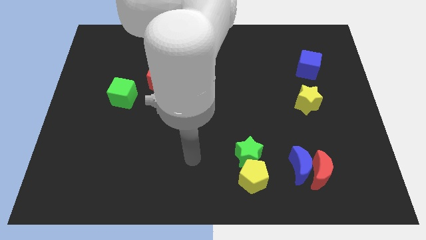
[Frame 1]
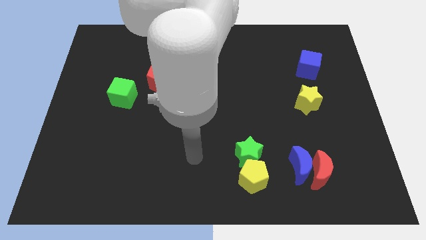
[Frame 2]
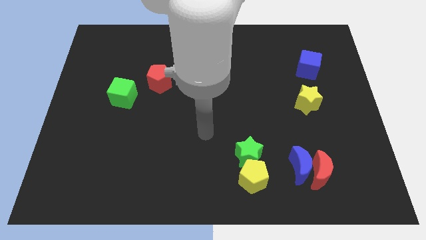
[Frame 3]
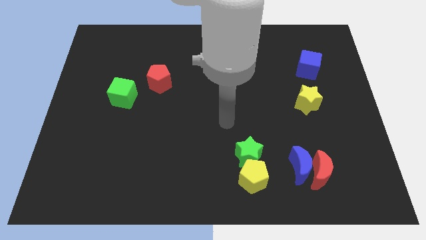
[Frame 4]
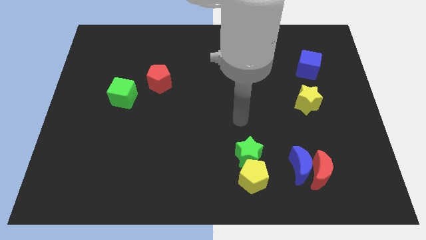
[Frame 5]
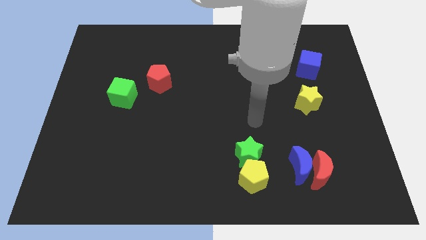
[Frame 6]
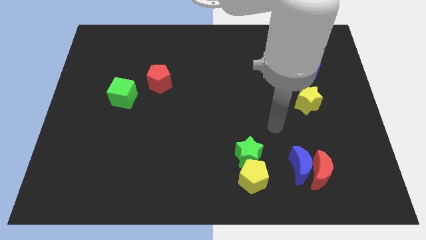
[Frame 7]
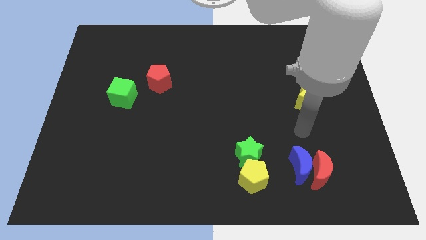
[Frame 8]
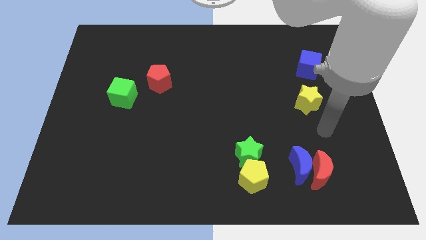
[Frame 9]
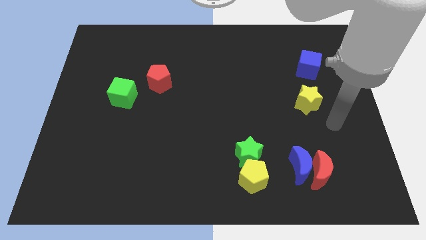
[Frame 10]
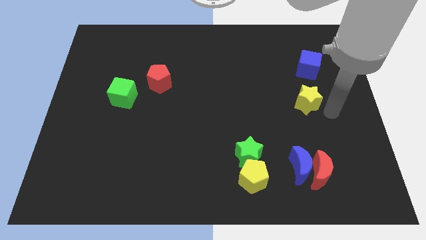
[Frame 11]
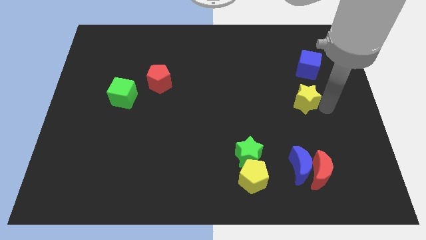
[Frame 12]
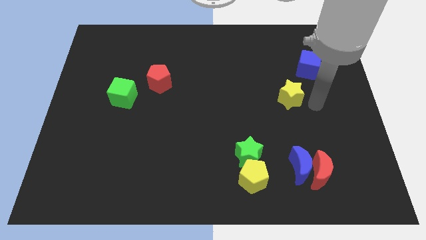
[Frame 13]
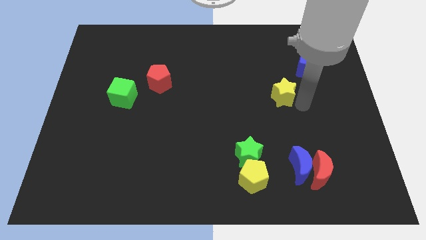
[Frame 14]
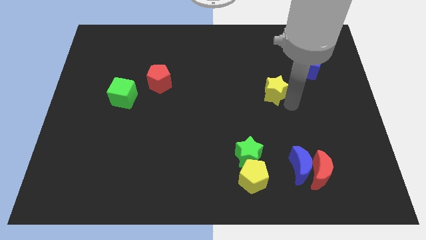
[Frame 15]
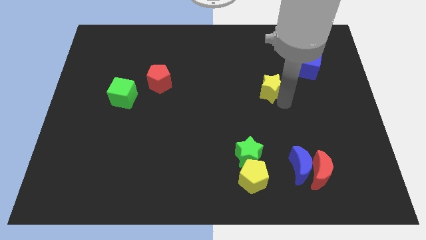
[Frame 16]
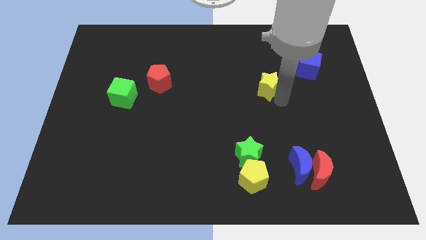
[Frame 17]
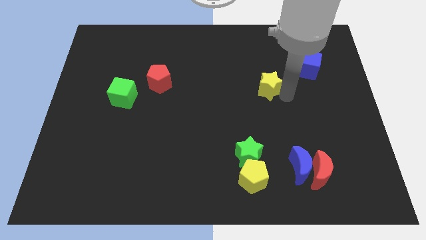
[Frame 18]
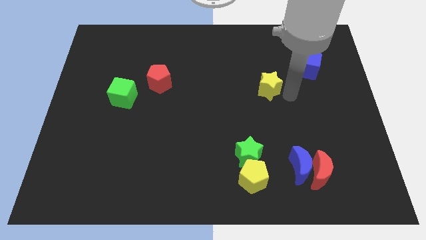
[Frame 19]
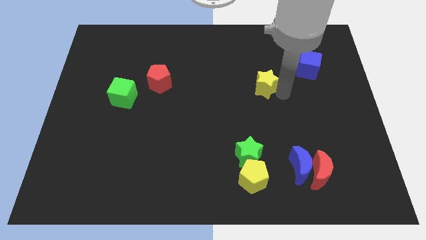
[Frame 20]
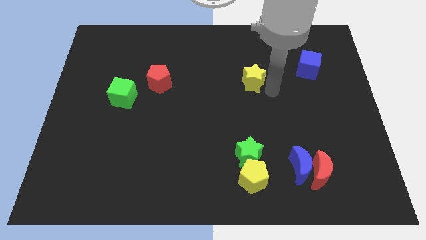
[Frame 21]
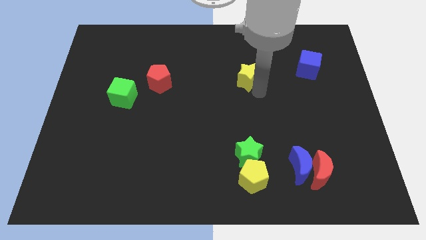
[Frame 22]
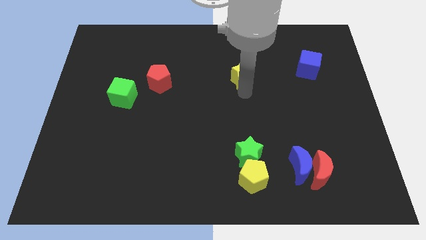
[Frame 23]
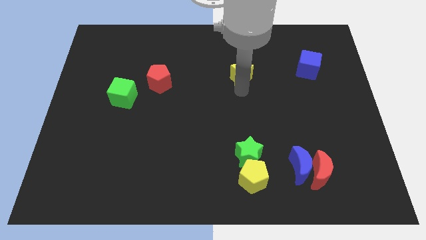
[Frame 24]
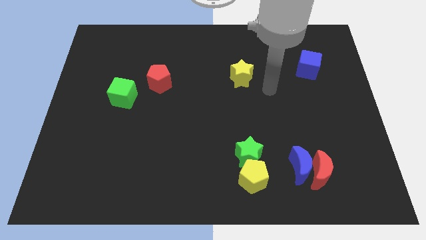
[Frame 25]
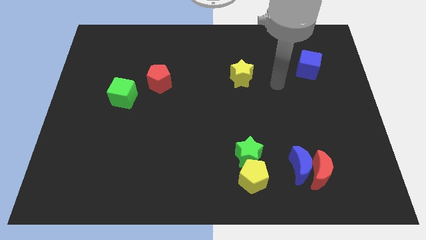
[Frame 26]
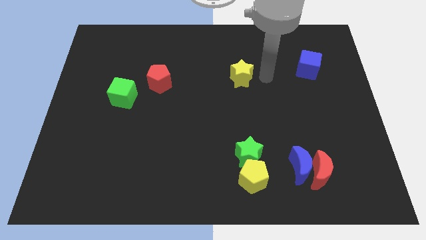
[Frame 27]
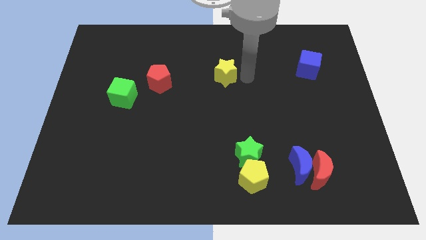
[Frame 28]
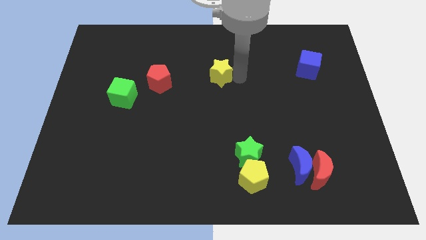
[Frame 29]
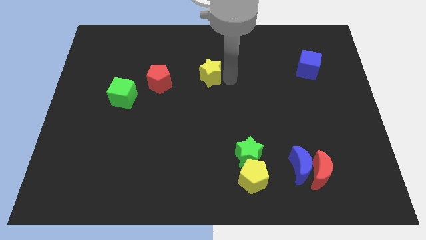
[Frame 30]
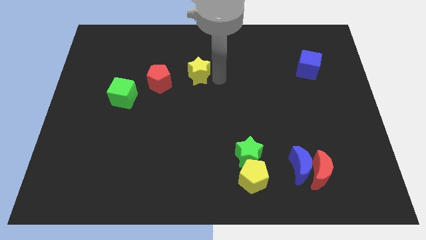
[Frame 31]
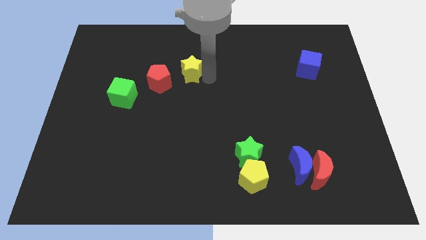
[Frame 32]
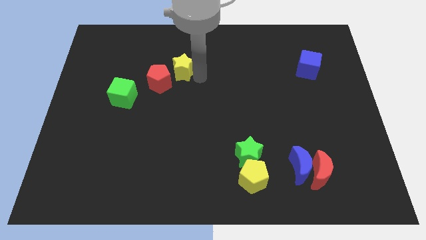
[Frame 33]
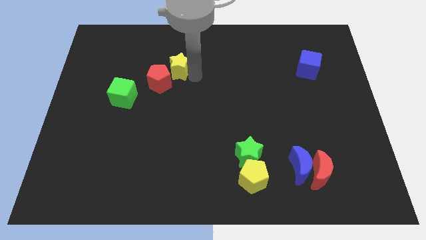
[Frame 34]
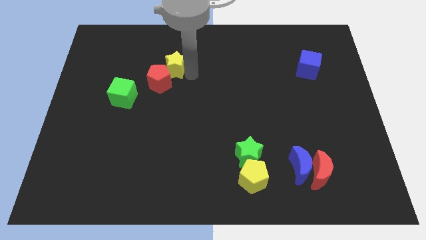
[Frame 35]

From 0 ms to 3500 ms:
slide the yellow star next to the red pentagon

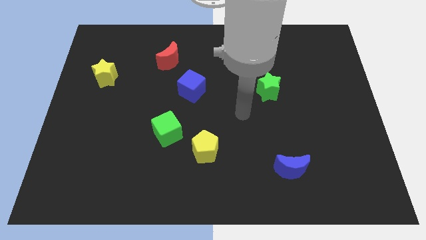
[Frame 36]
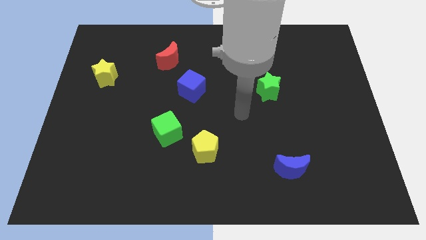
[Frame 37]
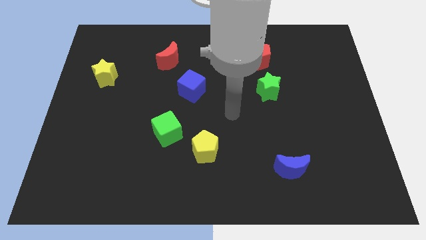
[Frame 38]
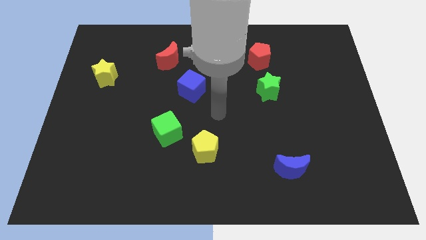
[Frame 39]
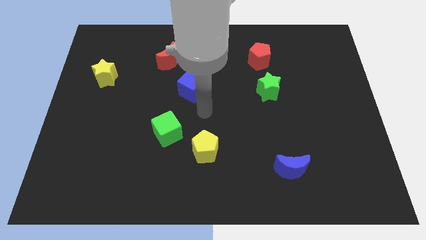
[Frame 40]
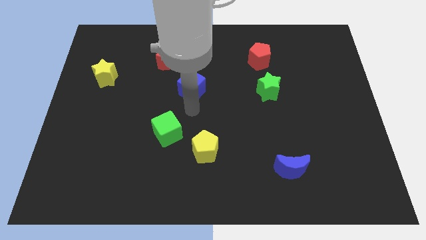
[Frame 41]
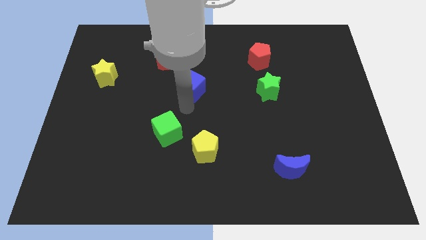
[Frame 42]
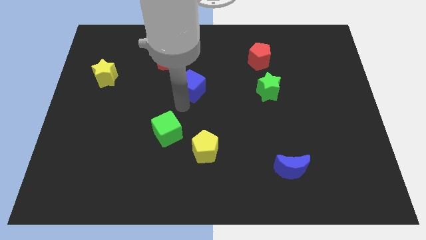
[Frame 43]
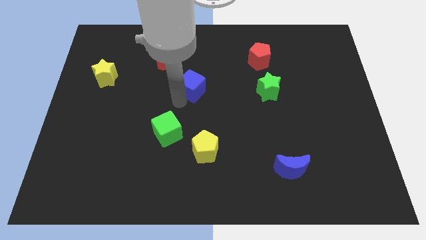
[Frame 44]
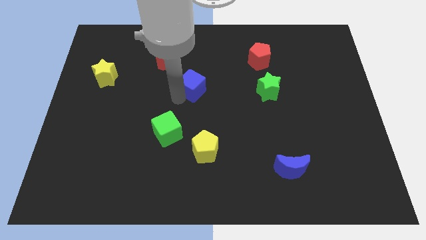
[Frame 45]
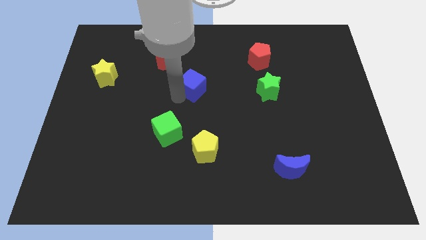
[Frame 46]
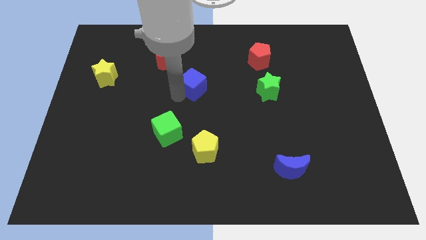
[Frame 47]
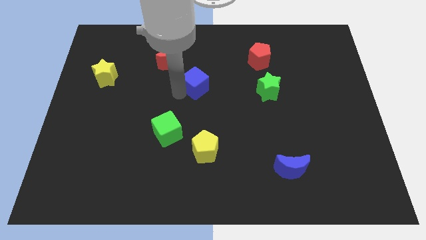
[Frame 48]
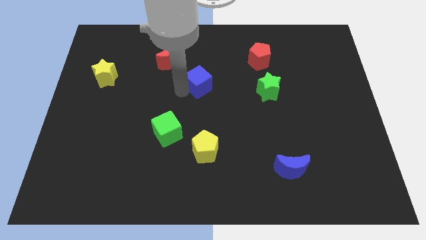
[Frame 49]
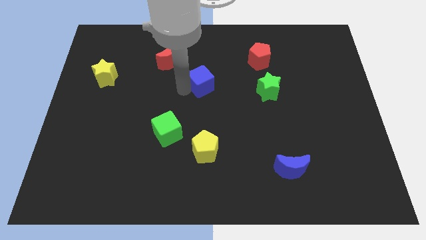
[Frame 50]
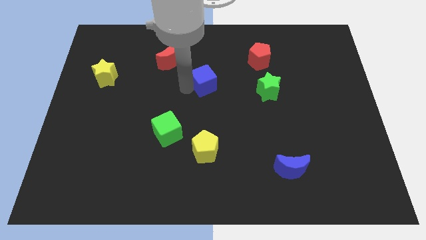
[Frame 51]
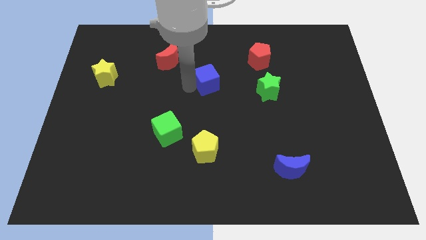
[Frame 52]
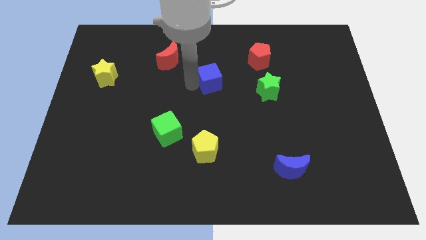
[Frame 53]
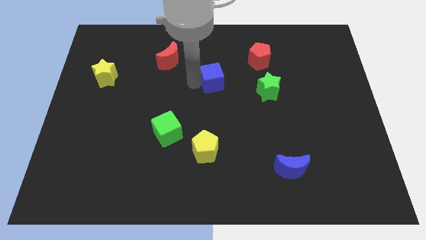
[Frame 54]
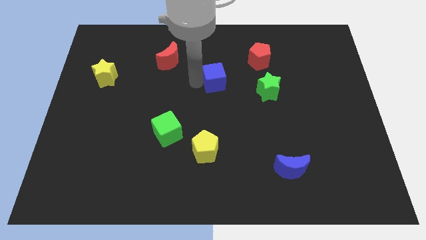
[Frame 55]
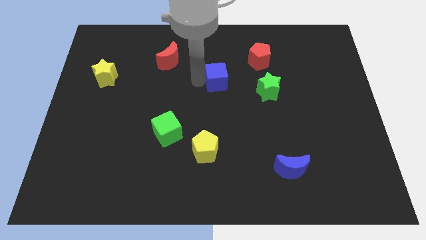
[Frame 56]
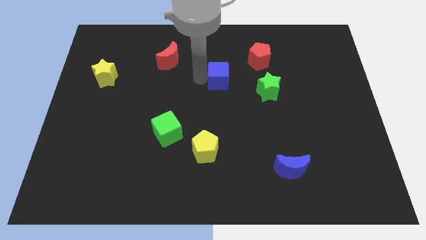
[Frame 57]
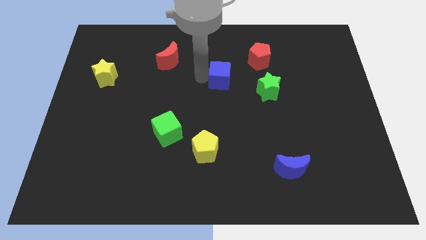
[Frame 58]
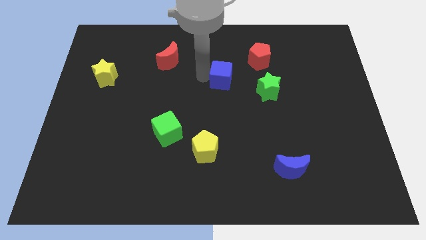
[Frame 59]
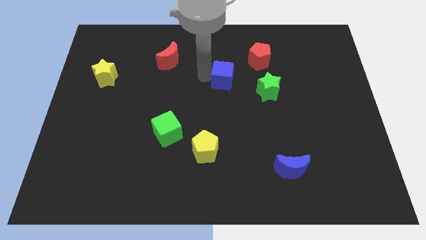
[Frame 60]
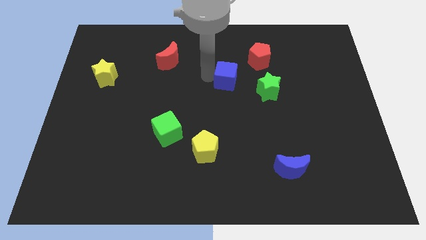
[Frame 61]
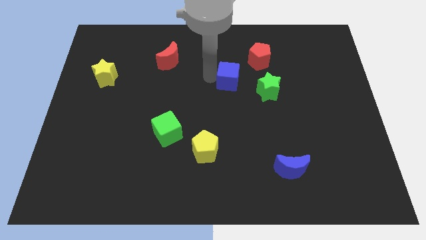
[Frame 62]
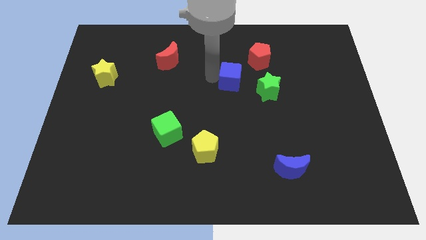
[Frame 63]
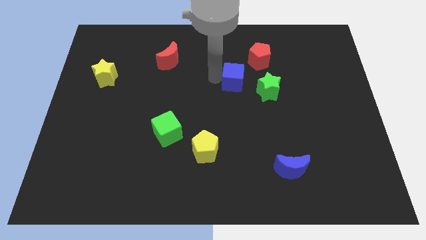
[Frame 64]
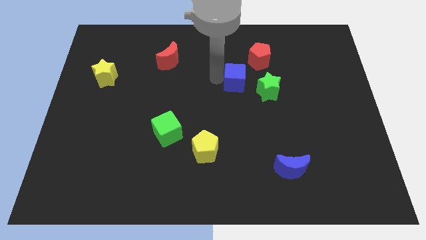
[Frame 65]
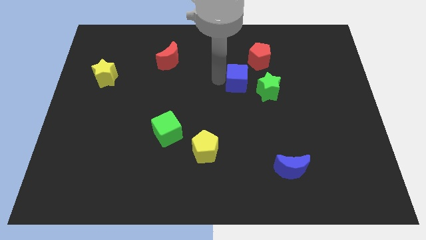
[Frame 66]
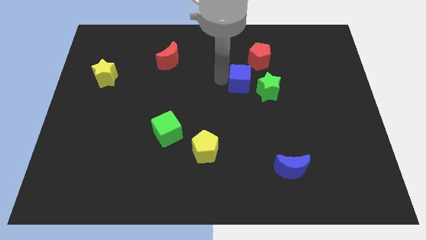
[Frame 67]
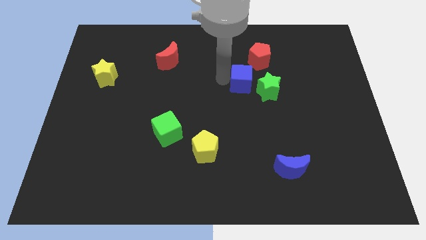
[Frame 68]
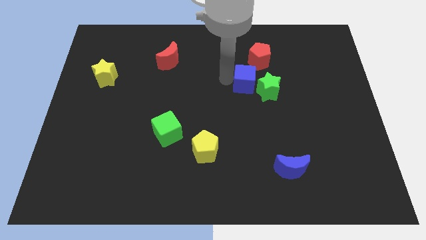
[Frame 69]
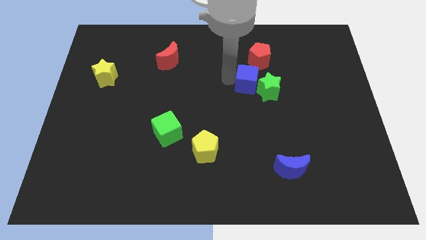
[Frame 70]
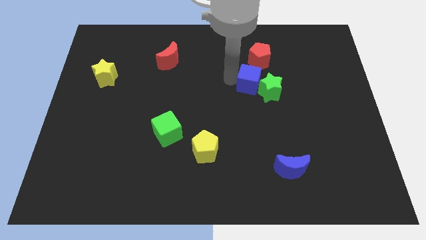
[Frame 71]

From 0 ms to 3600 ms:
move the blue cube next to the green star

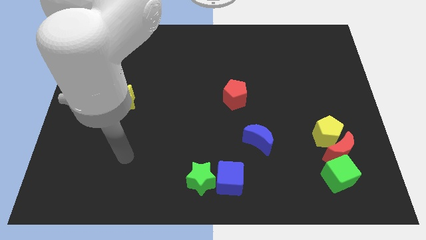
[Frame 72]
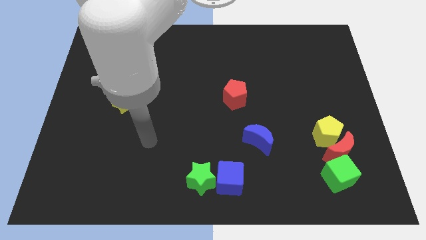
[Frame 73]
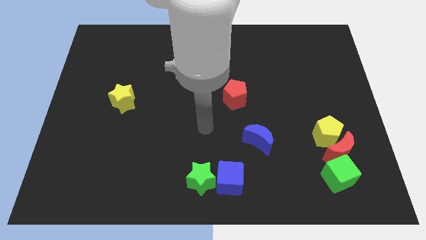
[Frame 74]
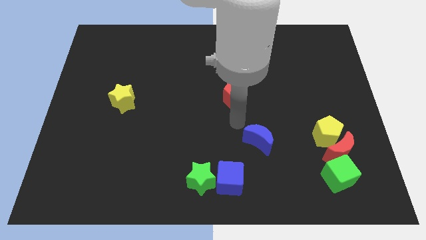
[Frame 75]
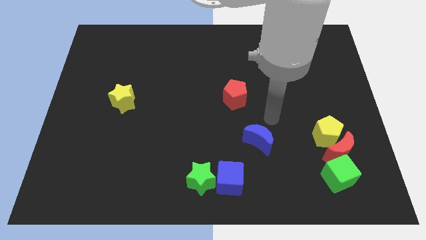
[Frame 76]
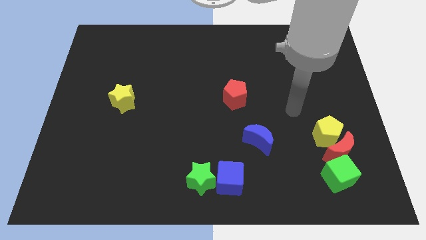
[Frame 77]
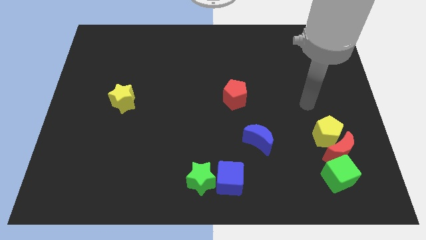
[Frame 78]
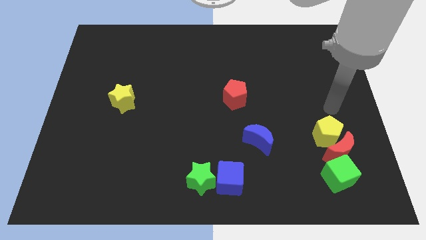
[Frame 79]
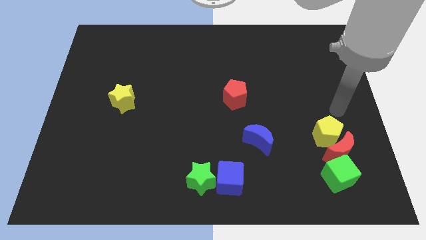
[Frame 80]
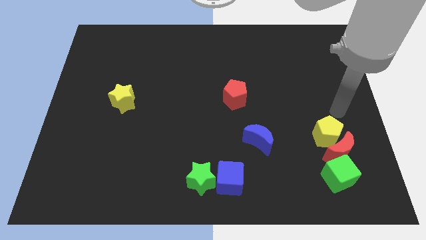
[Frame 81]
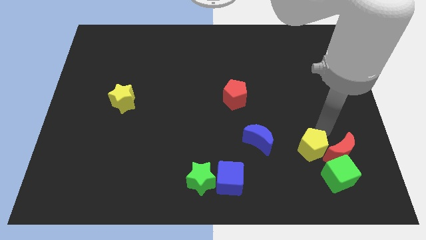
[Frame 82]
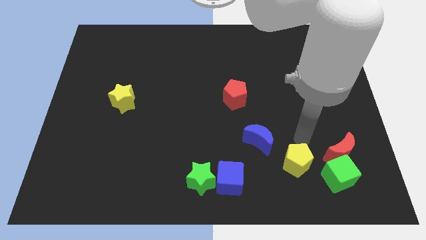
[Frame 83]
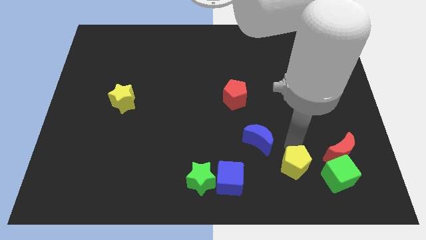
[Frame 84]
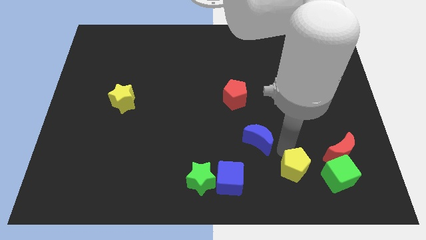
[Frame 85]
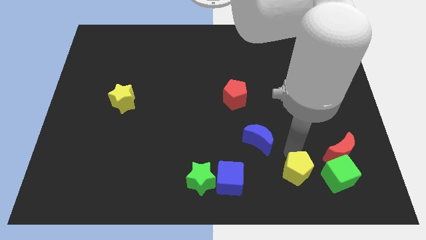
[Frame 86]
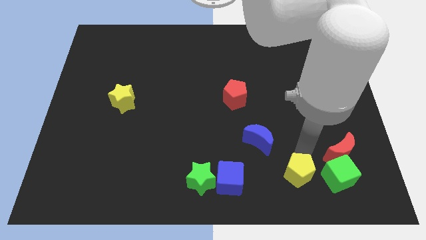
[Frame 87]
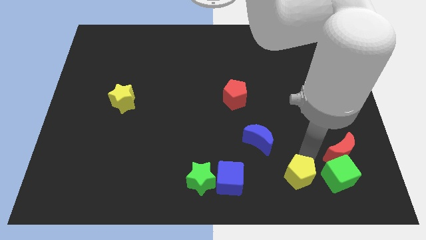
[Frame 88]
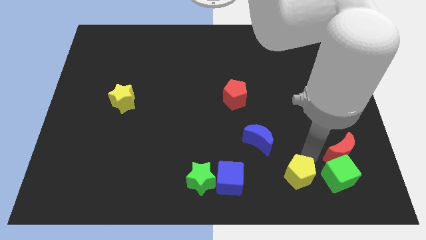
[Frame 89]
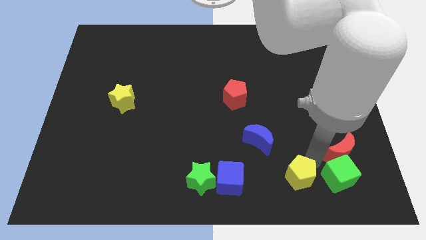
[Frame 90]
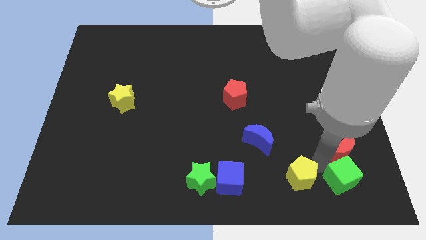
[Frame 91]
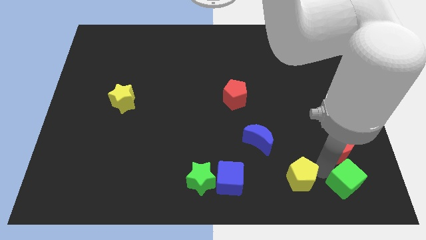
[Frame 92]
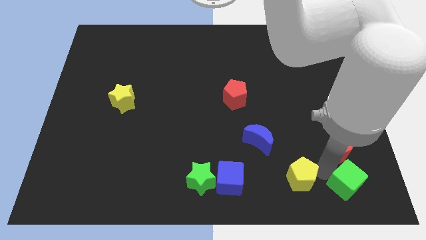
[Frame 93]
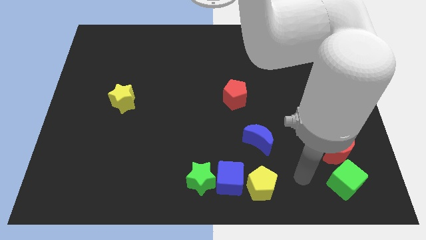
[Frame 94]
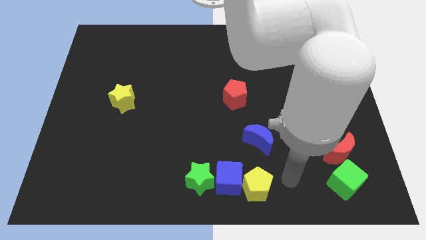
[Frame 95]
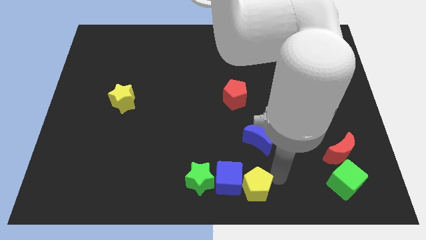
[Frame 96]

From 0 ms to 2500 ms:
put the yellow pentagon next to the blue cube
